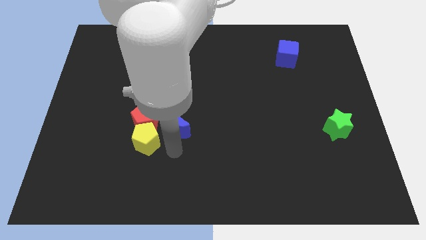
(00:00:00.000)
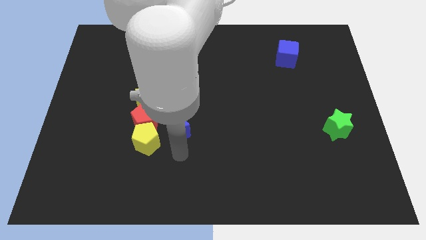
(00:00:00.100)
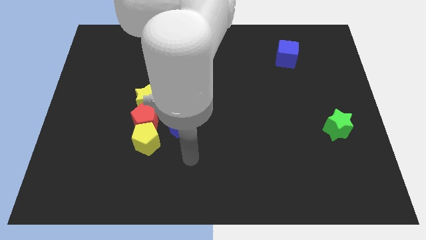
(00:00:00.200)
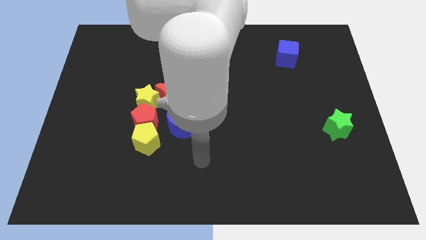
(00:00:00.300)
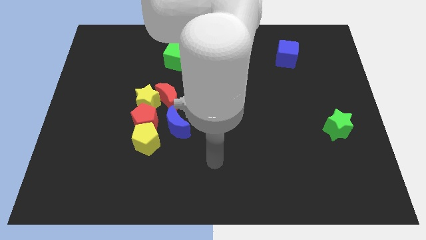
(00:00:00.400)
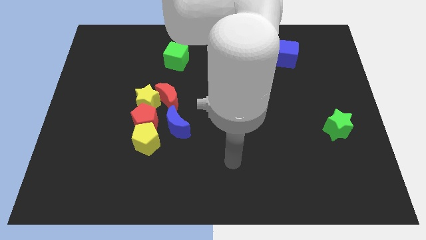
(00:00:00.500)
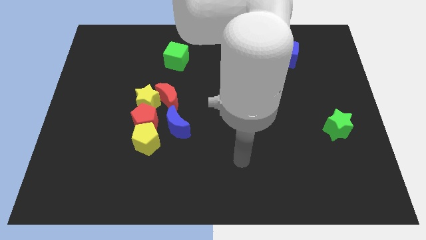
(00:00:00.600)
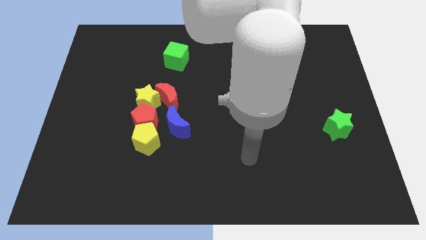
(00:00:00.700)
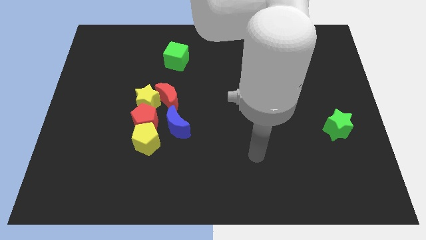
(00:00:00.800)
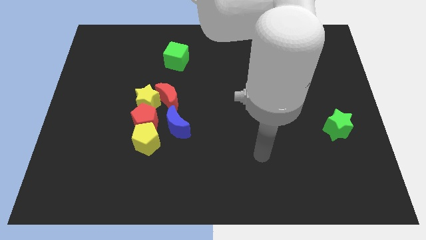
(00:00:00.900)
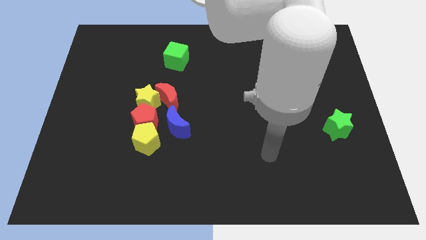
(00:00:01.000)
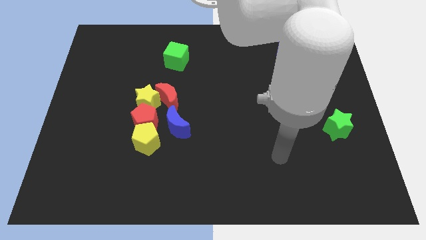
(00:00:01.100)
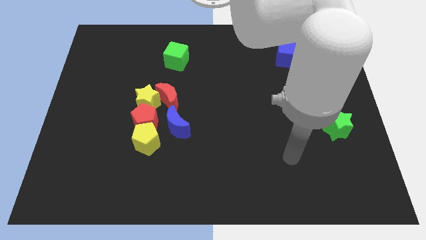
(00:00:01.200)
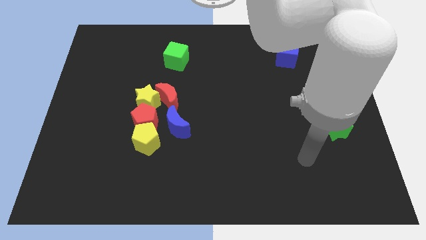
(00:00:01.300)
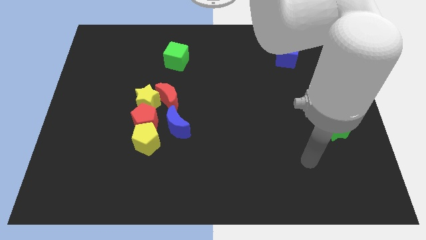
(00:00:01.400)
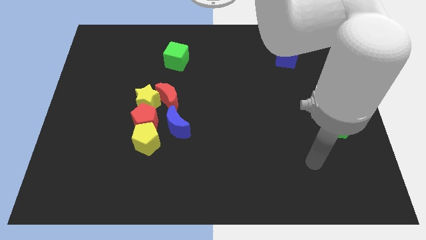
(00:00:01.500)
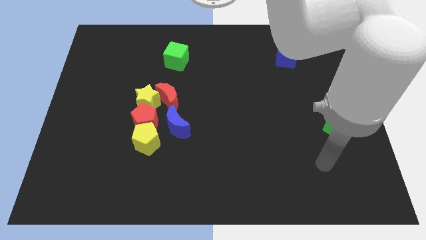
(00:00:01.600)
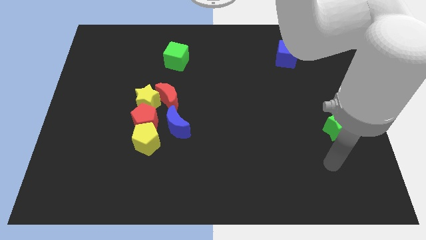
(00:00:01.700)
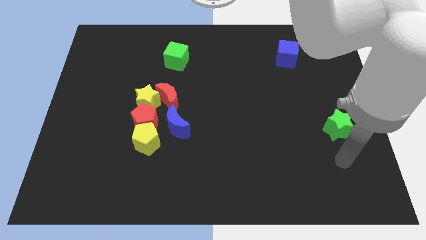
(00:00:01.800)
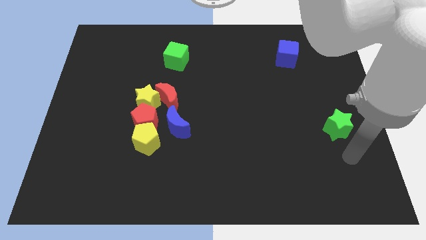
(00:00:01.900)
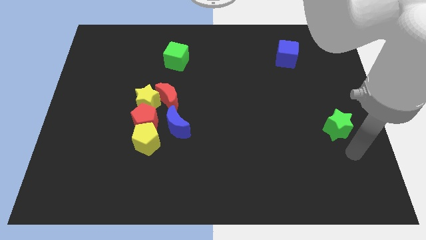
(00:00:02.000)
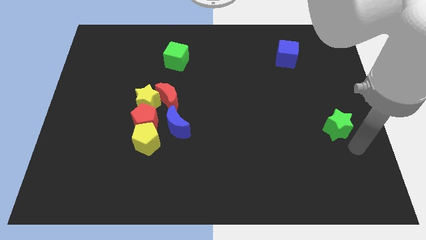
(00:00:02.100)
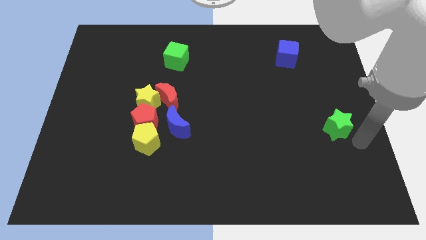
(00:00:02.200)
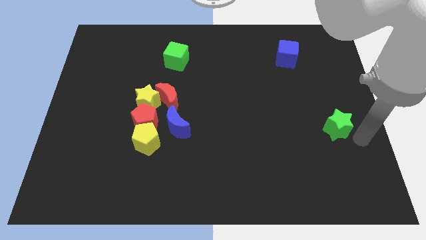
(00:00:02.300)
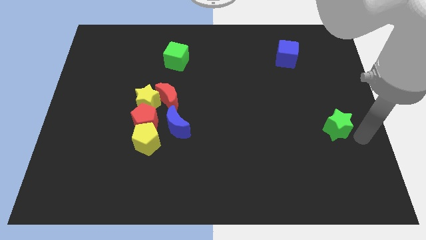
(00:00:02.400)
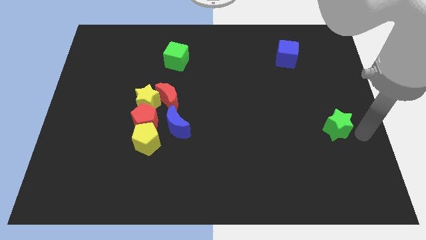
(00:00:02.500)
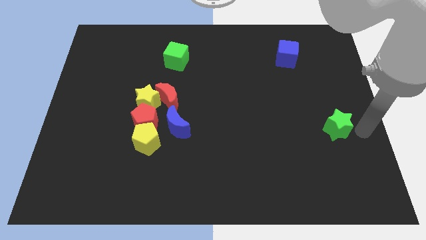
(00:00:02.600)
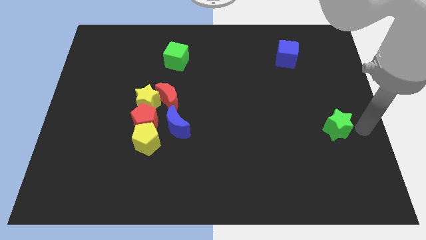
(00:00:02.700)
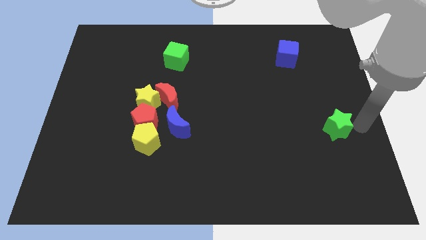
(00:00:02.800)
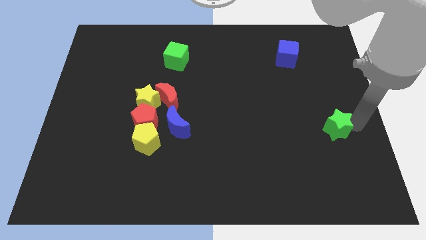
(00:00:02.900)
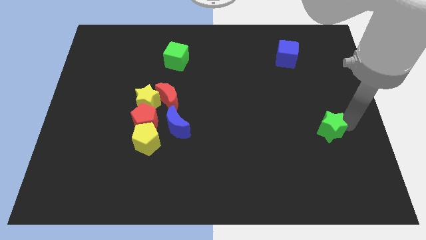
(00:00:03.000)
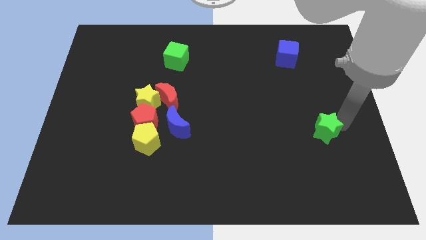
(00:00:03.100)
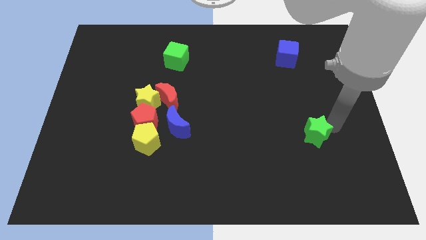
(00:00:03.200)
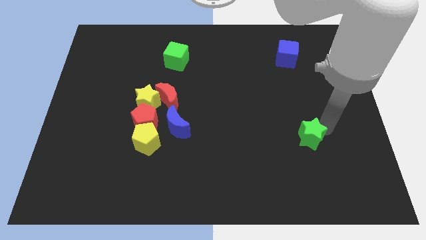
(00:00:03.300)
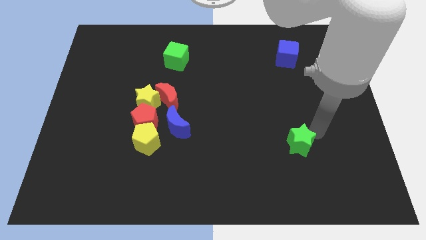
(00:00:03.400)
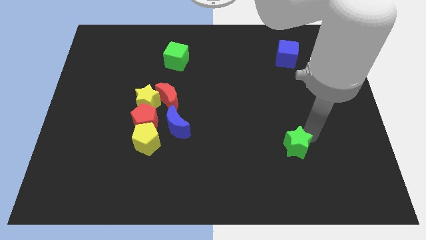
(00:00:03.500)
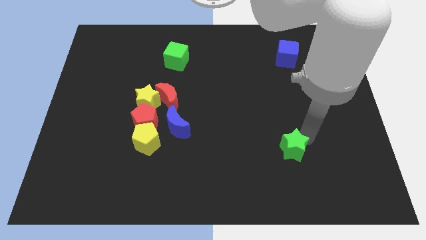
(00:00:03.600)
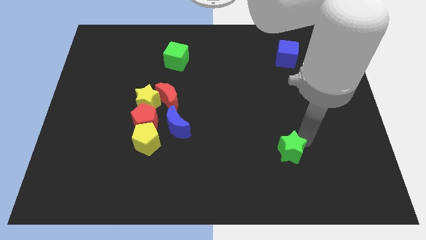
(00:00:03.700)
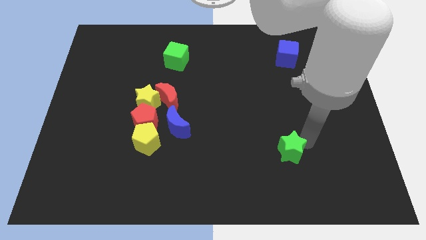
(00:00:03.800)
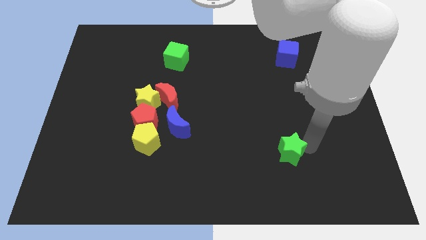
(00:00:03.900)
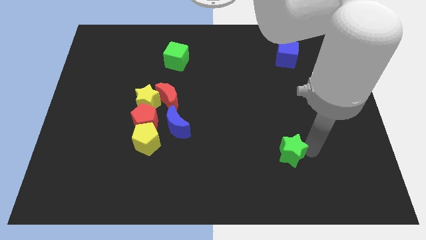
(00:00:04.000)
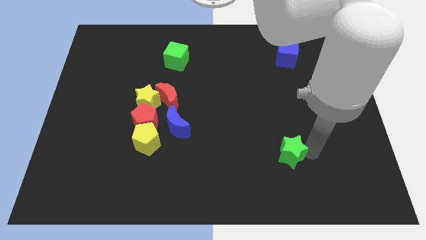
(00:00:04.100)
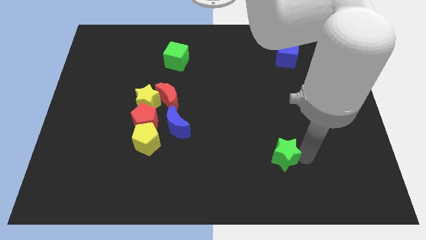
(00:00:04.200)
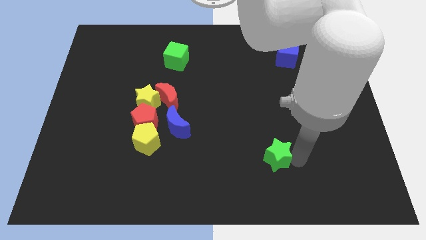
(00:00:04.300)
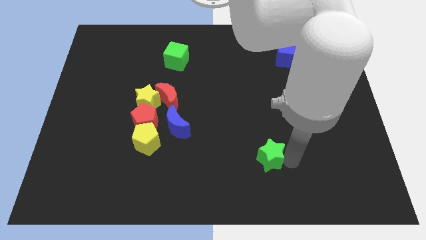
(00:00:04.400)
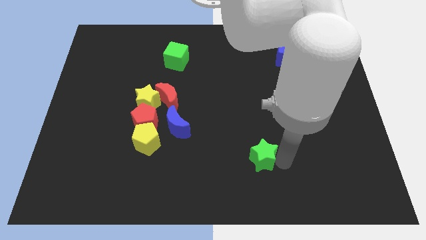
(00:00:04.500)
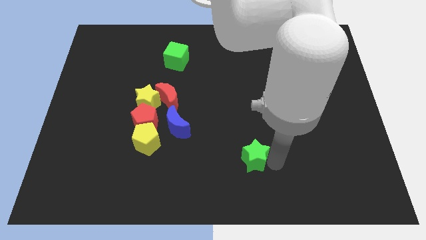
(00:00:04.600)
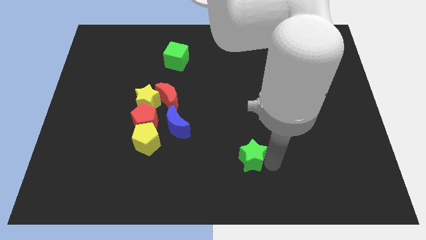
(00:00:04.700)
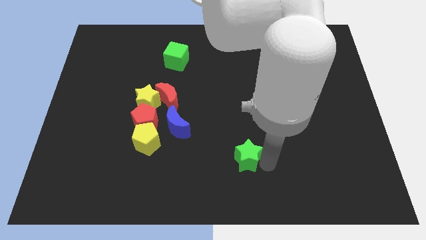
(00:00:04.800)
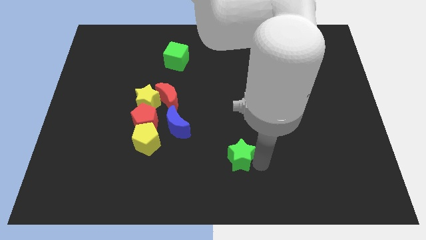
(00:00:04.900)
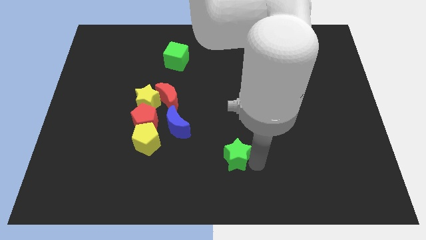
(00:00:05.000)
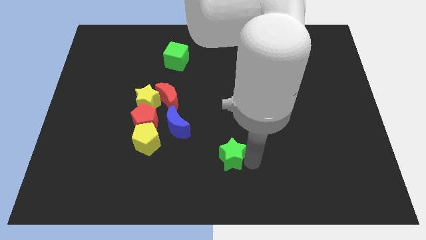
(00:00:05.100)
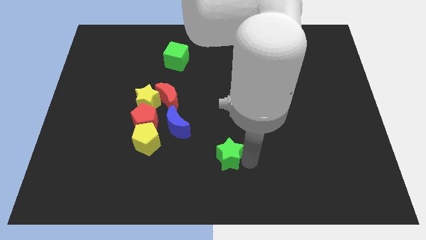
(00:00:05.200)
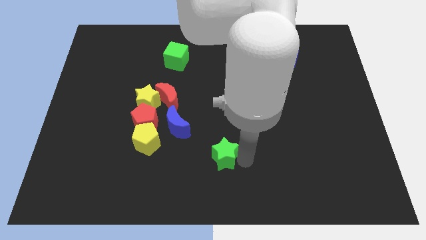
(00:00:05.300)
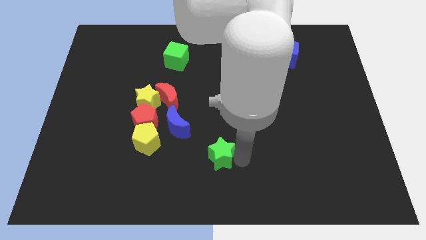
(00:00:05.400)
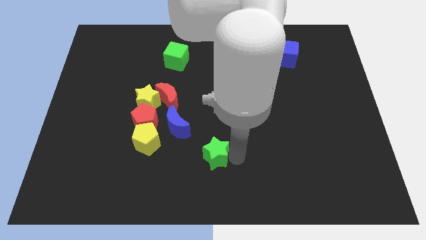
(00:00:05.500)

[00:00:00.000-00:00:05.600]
slide the green star towards the yellow pentagon

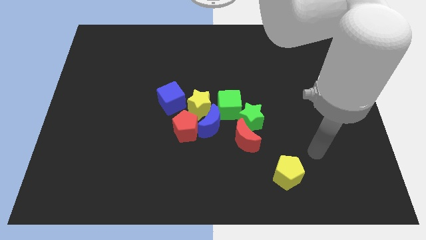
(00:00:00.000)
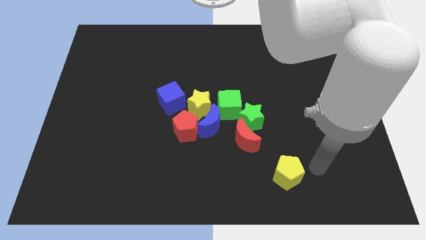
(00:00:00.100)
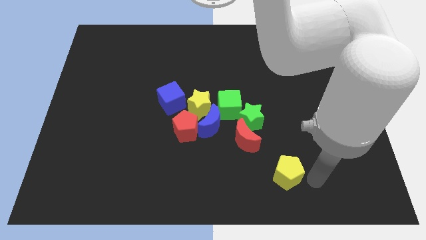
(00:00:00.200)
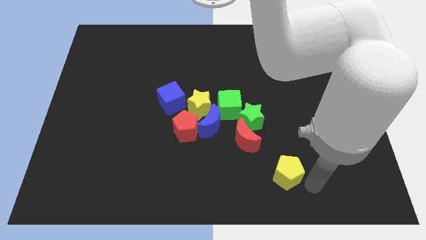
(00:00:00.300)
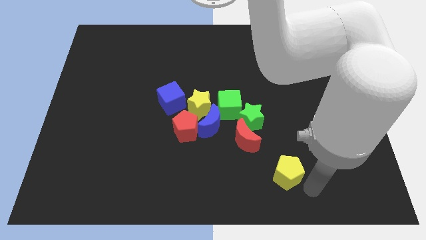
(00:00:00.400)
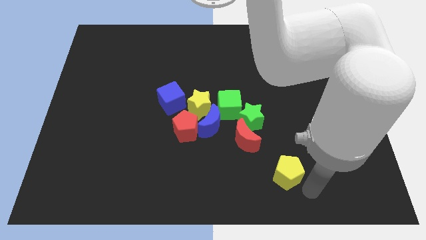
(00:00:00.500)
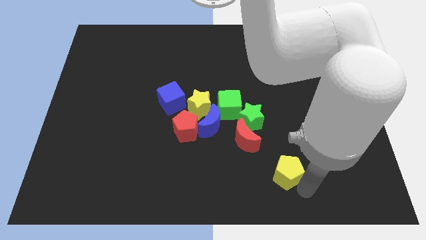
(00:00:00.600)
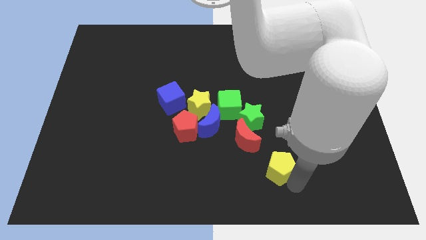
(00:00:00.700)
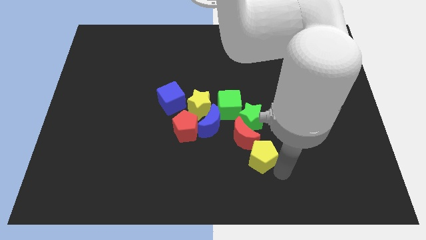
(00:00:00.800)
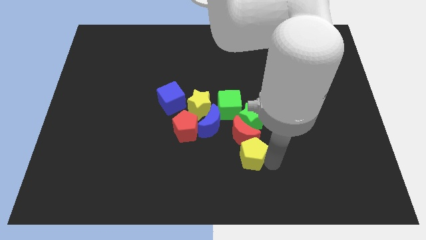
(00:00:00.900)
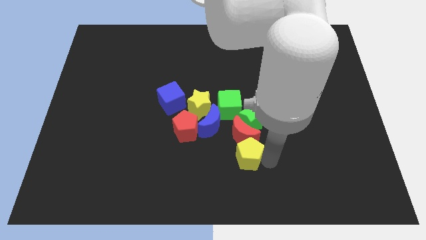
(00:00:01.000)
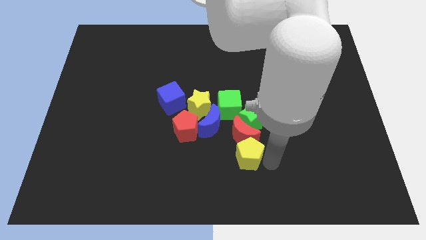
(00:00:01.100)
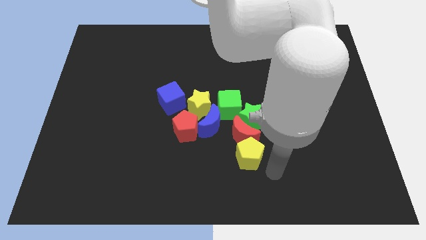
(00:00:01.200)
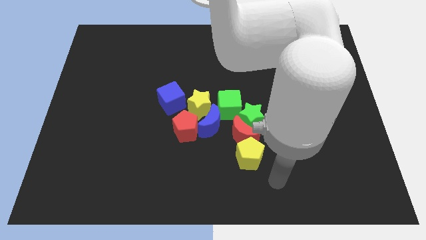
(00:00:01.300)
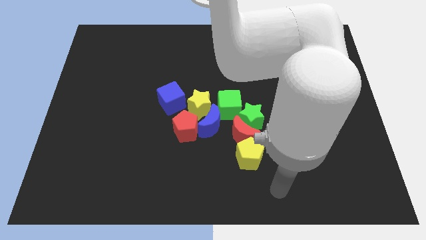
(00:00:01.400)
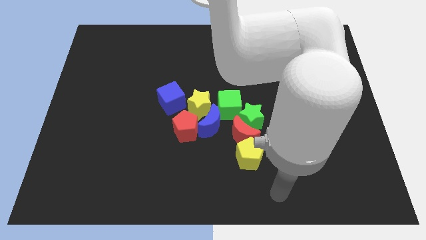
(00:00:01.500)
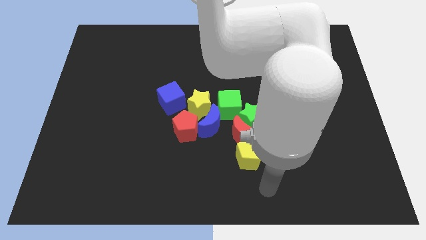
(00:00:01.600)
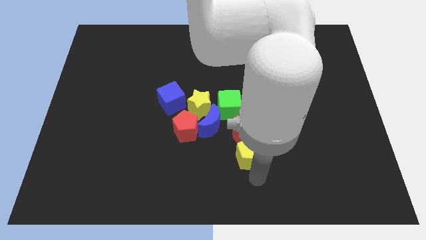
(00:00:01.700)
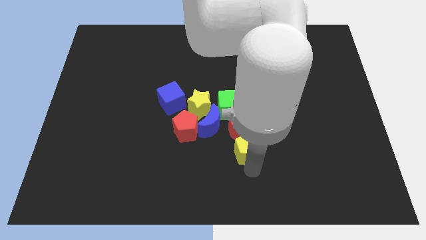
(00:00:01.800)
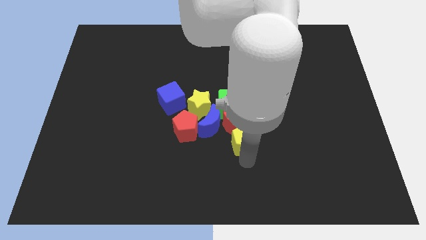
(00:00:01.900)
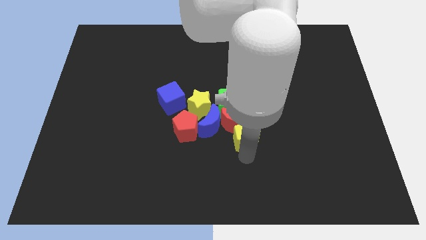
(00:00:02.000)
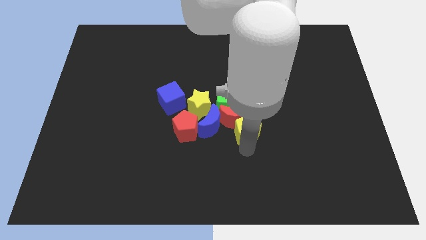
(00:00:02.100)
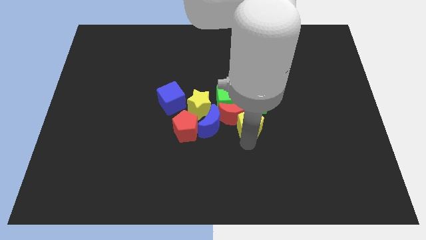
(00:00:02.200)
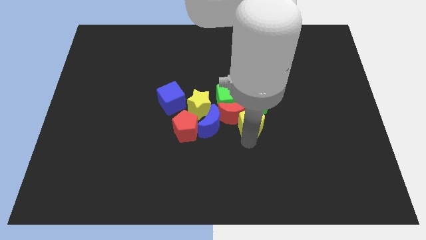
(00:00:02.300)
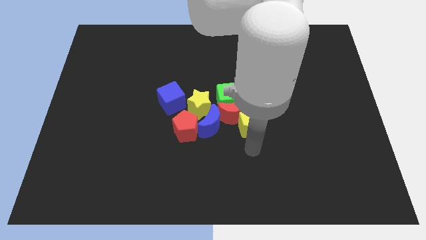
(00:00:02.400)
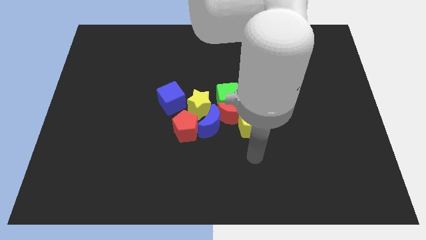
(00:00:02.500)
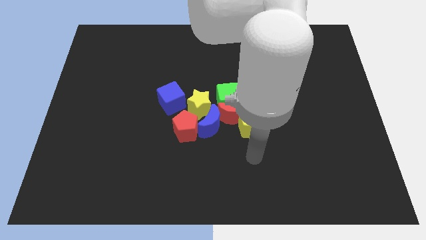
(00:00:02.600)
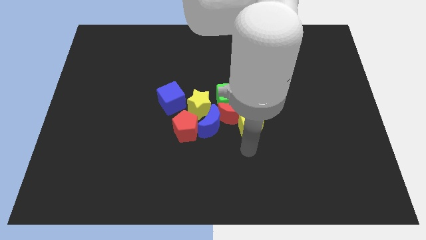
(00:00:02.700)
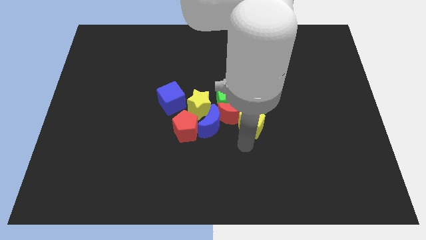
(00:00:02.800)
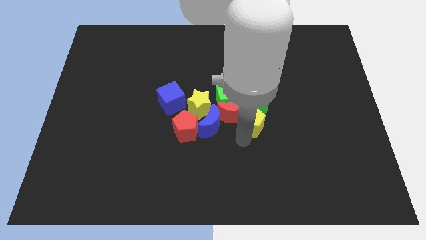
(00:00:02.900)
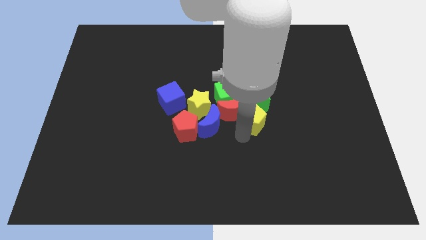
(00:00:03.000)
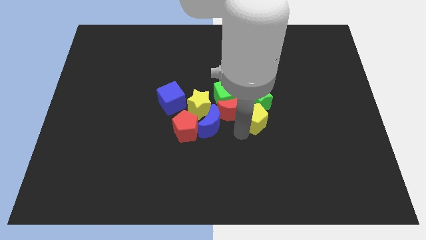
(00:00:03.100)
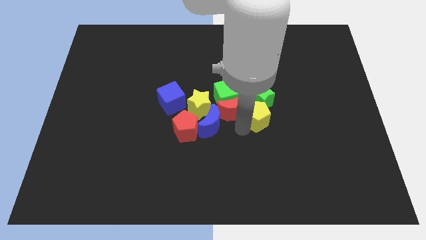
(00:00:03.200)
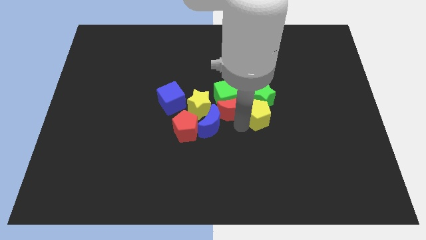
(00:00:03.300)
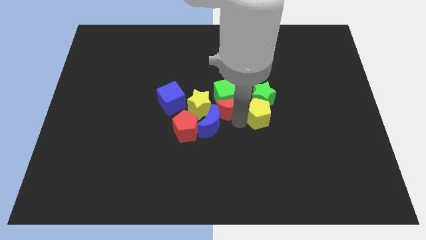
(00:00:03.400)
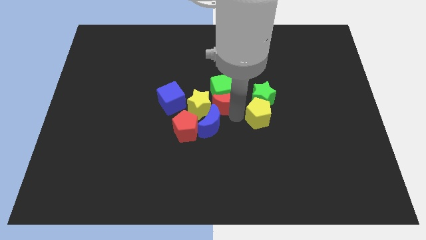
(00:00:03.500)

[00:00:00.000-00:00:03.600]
move the yellow pentagon to the bottom side of the green star
